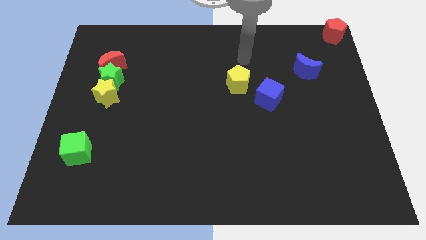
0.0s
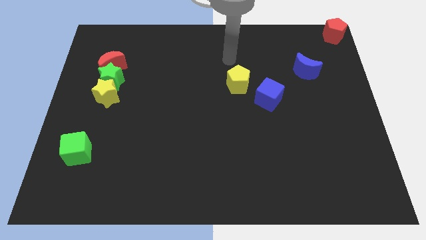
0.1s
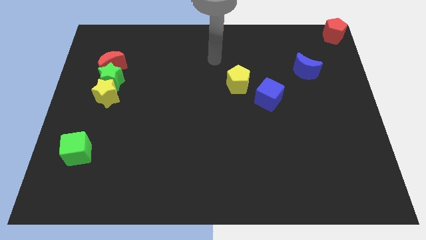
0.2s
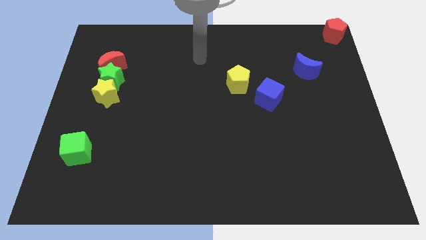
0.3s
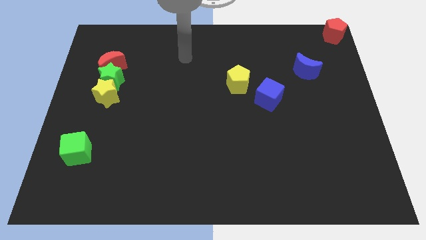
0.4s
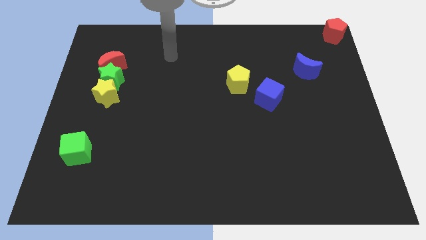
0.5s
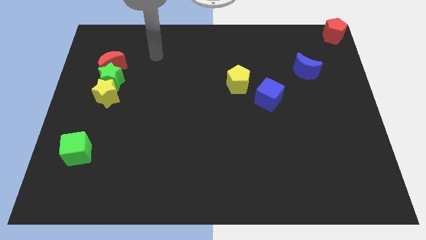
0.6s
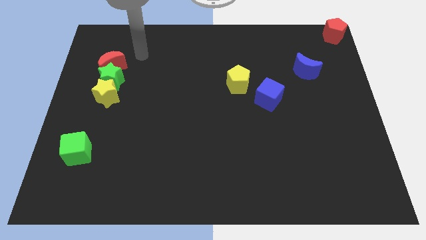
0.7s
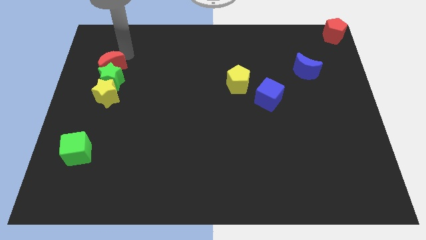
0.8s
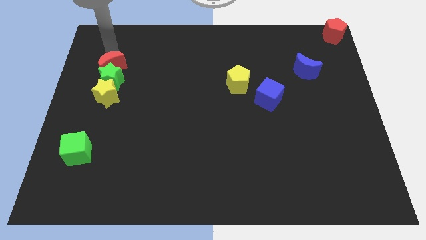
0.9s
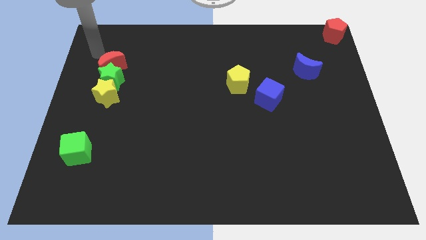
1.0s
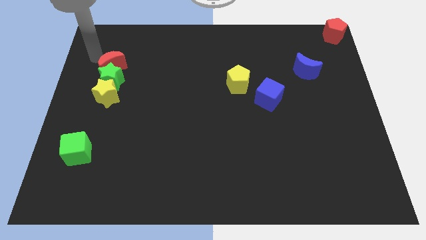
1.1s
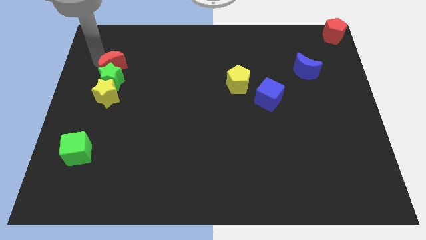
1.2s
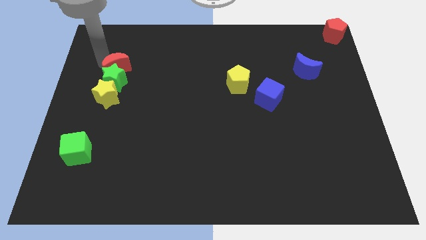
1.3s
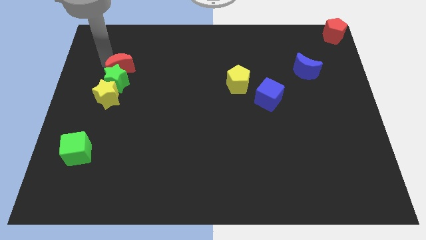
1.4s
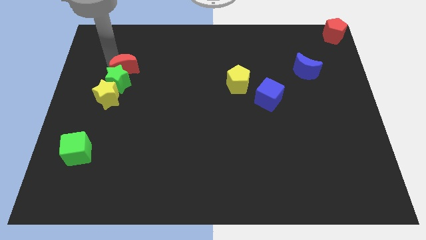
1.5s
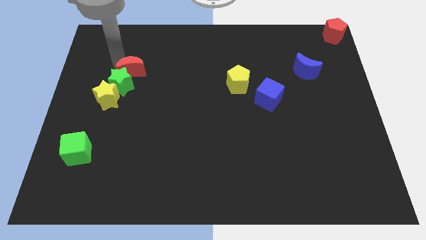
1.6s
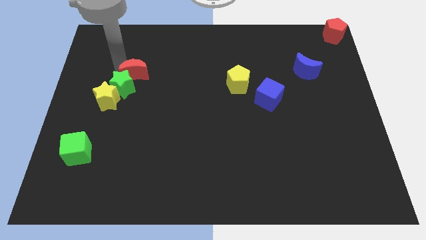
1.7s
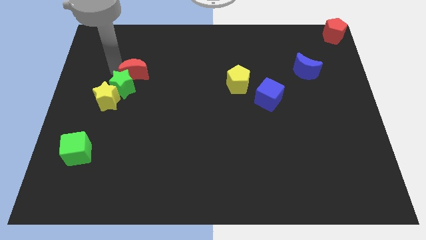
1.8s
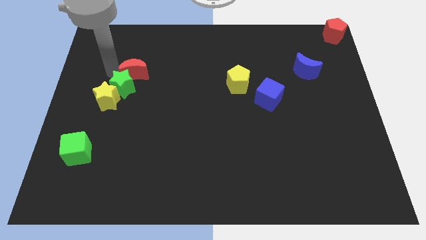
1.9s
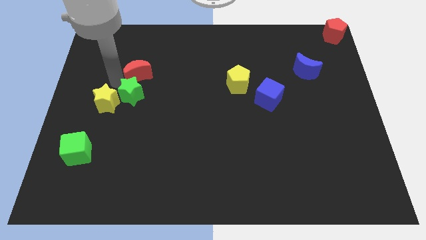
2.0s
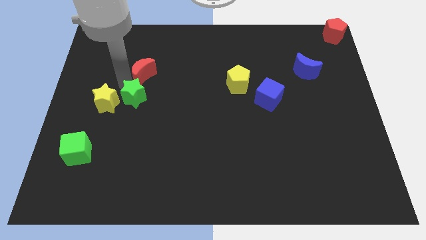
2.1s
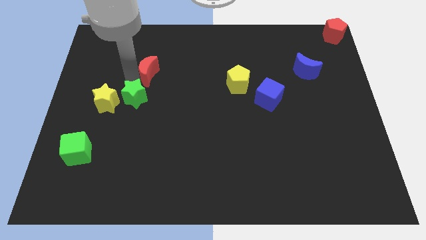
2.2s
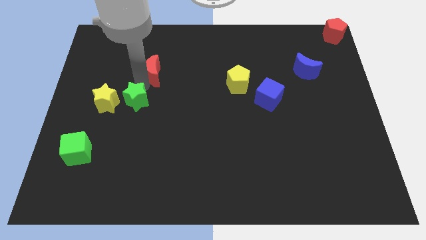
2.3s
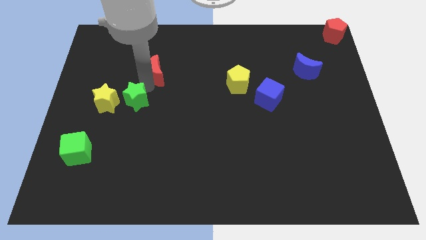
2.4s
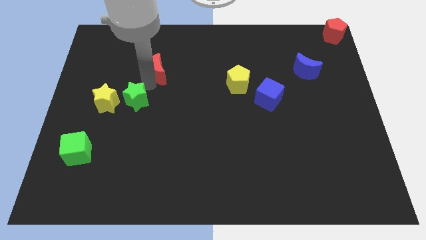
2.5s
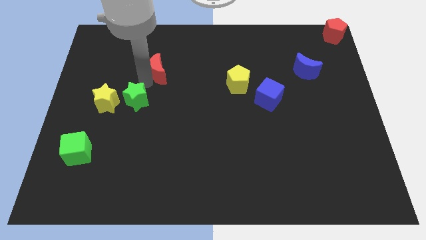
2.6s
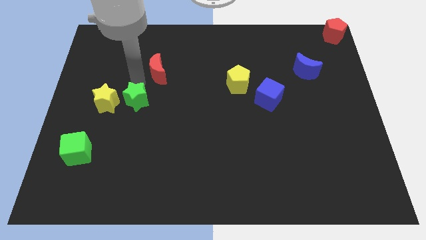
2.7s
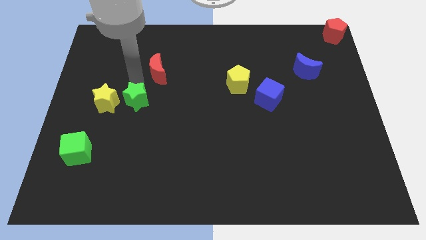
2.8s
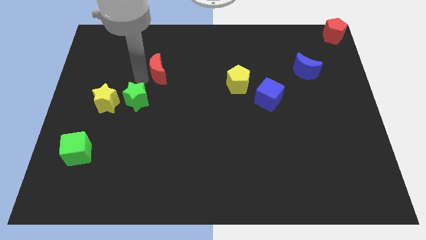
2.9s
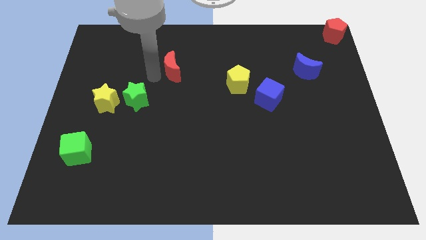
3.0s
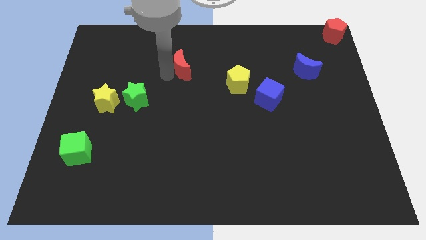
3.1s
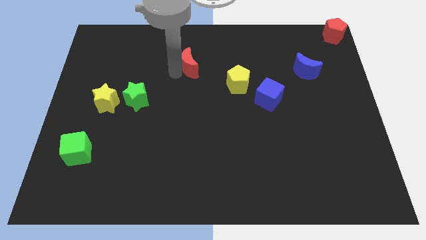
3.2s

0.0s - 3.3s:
push red crescent towards yellow pentagon

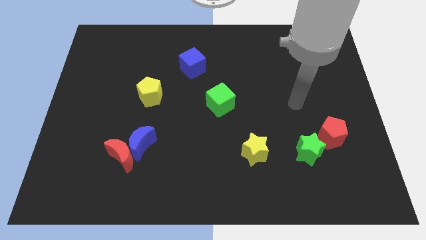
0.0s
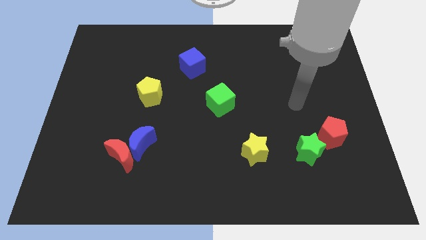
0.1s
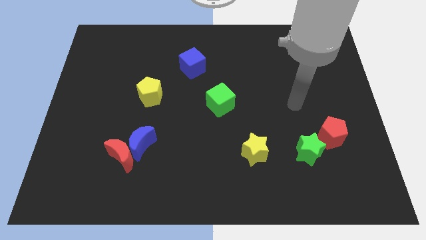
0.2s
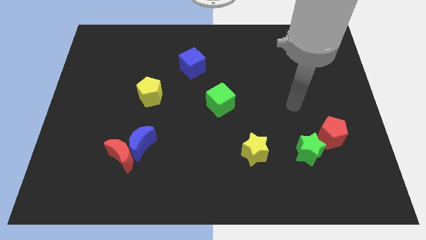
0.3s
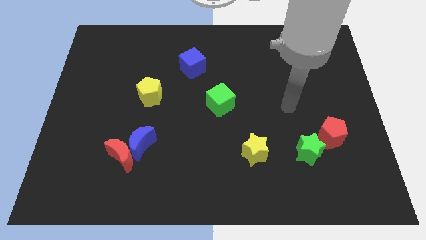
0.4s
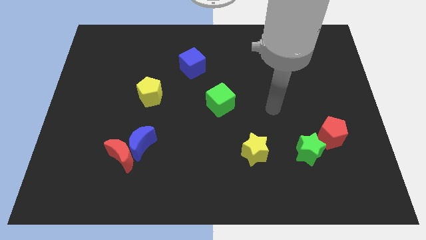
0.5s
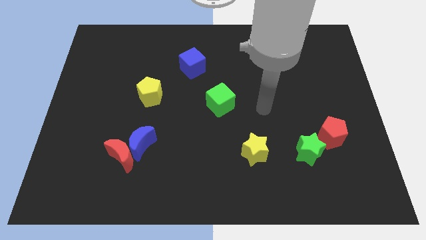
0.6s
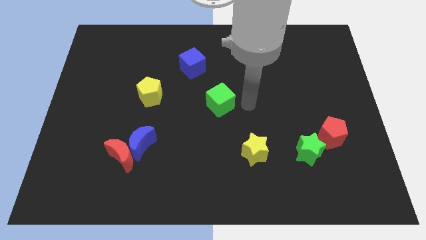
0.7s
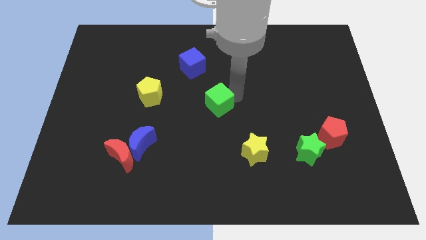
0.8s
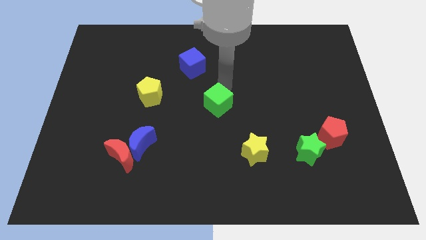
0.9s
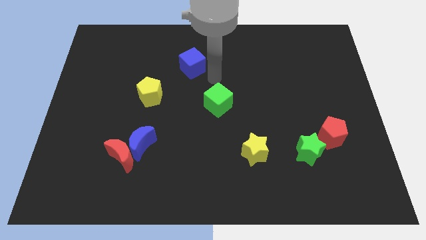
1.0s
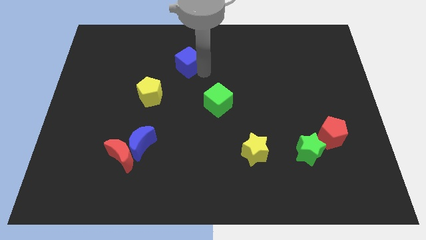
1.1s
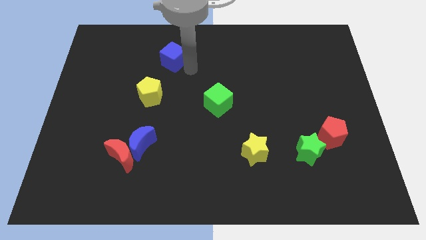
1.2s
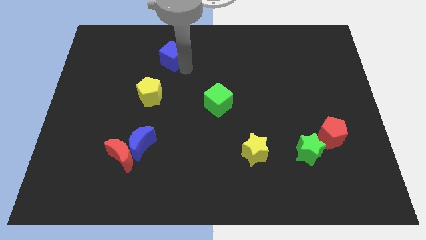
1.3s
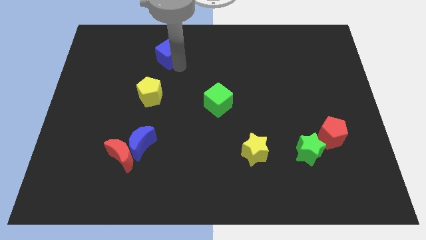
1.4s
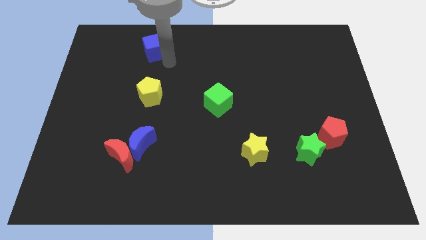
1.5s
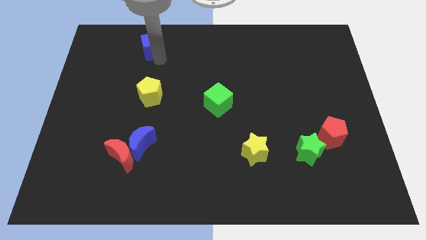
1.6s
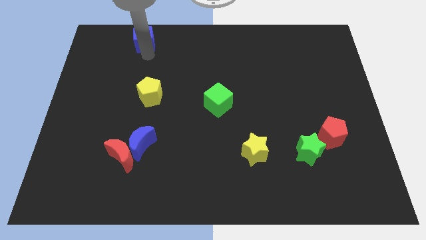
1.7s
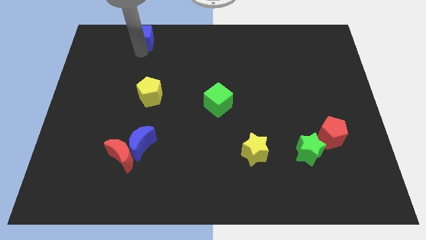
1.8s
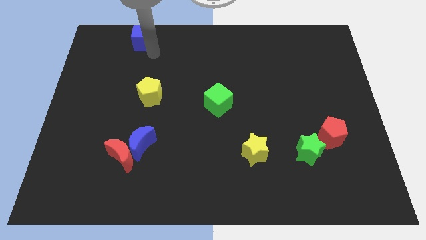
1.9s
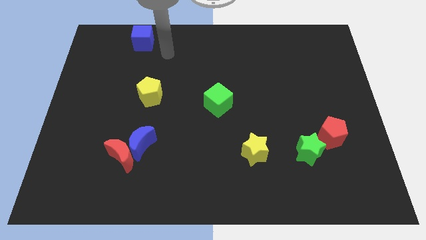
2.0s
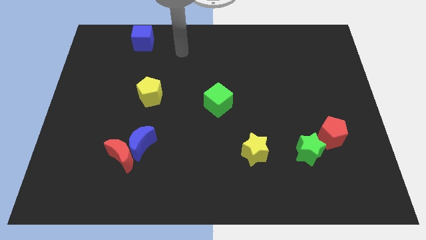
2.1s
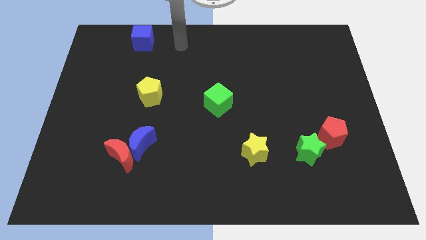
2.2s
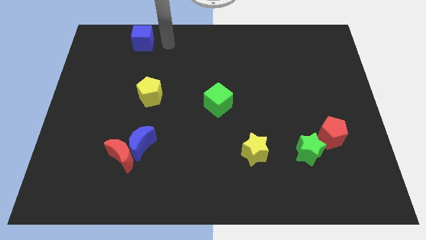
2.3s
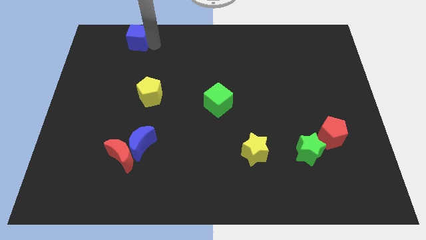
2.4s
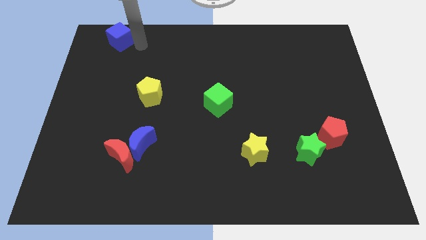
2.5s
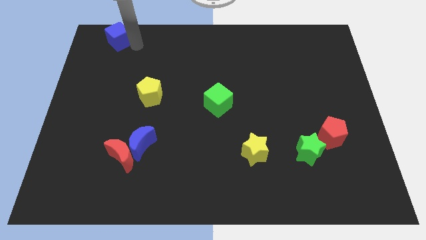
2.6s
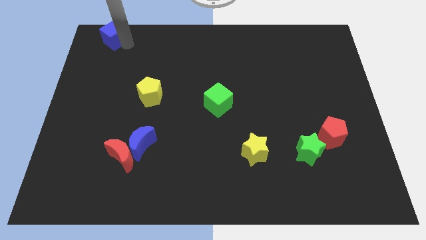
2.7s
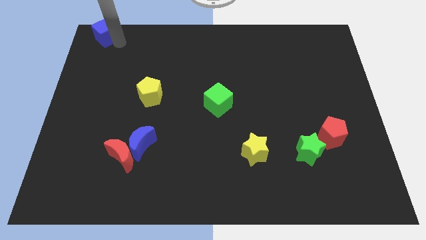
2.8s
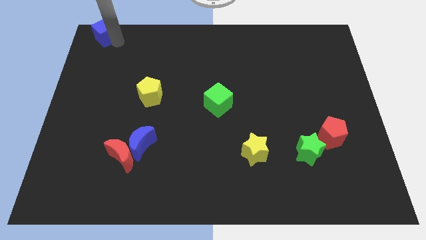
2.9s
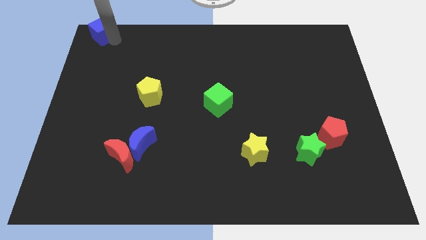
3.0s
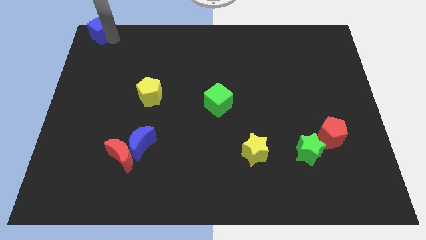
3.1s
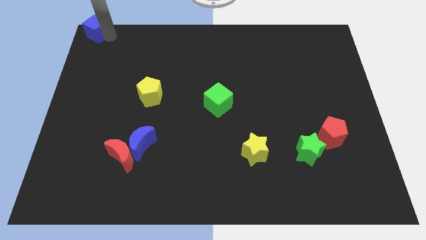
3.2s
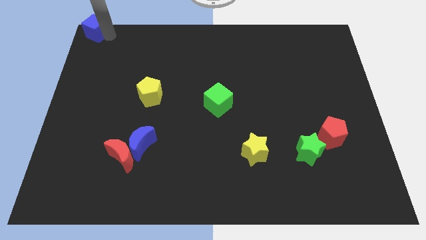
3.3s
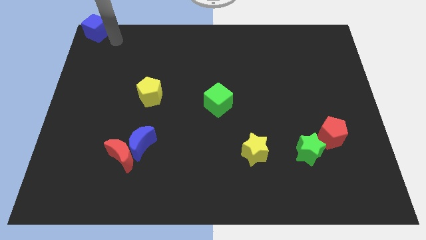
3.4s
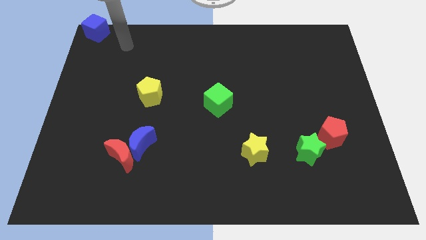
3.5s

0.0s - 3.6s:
push the blue cube on the top left corner of the board

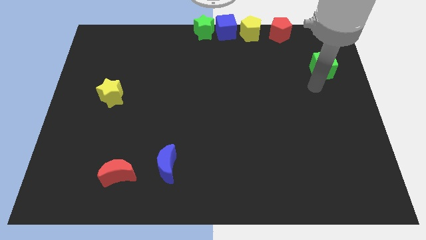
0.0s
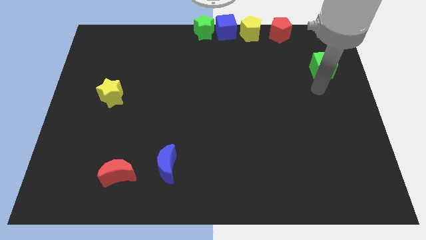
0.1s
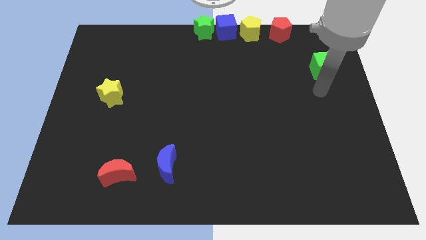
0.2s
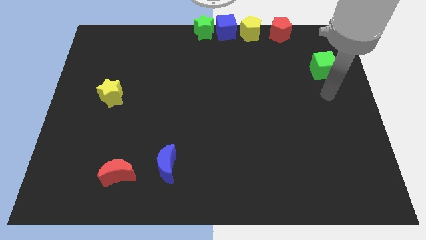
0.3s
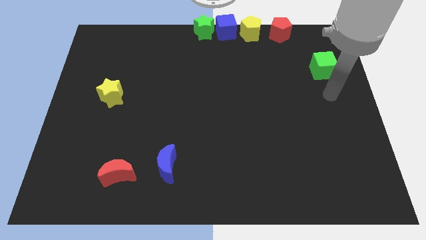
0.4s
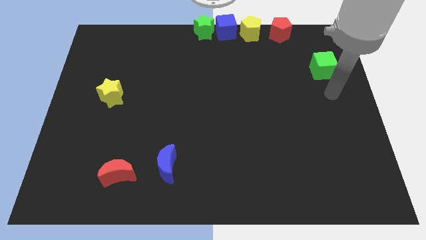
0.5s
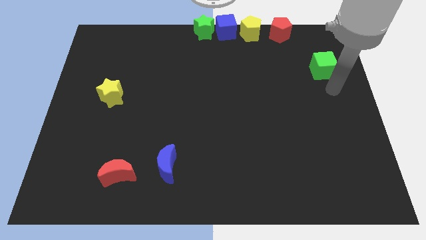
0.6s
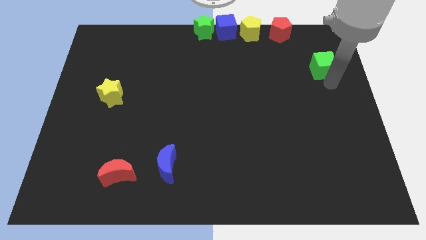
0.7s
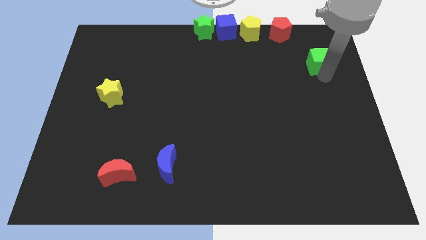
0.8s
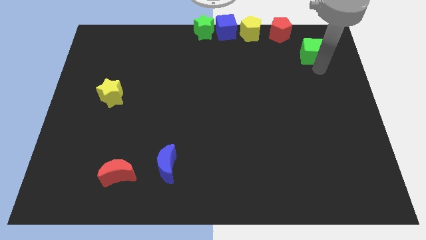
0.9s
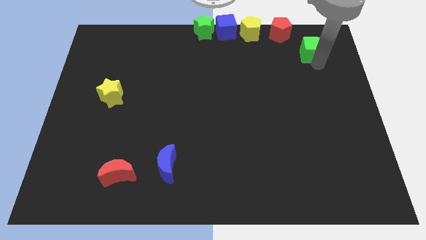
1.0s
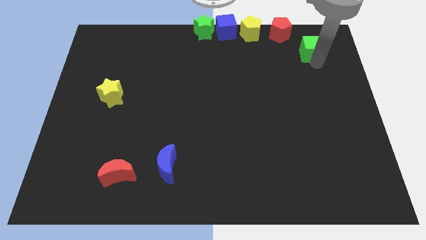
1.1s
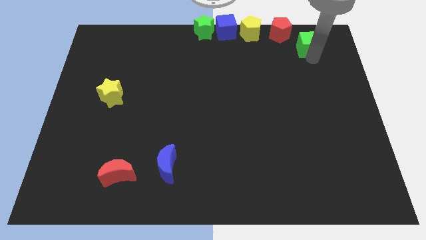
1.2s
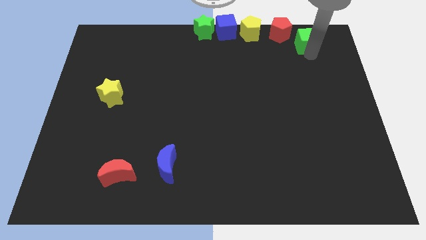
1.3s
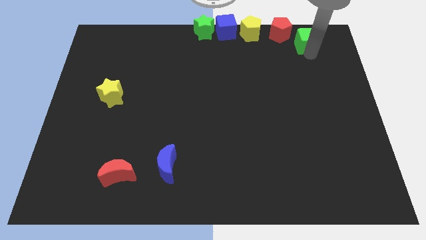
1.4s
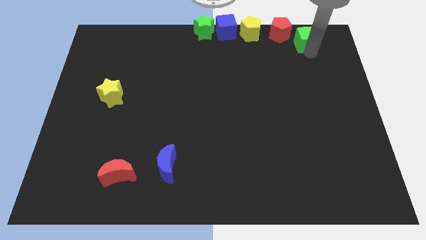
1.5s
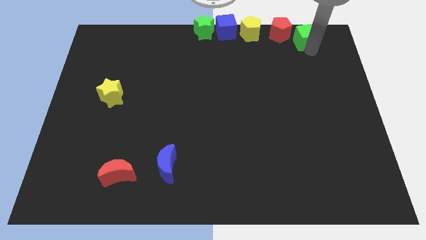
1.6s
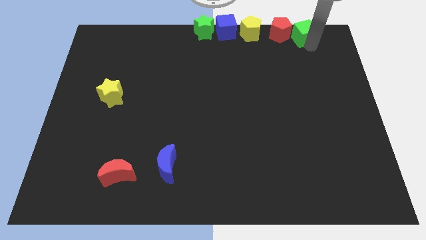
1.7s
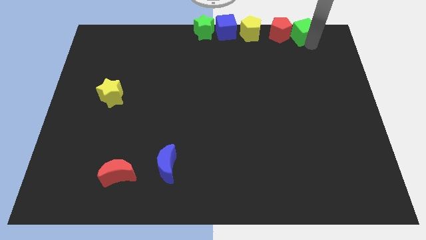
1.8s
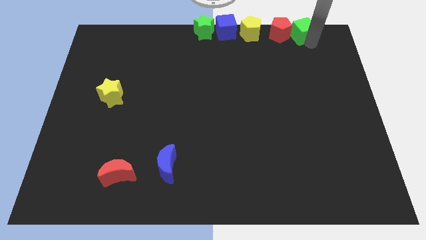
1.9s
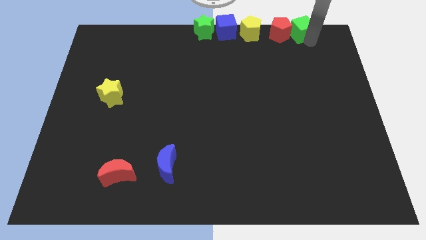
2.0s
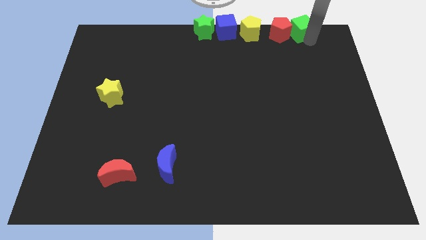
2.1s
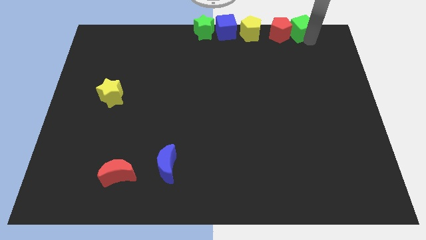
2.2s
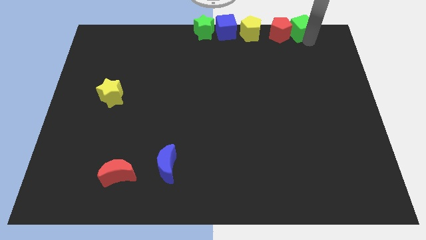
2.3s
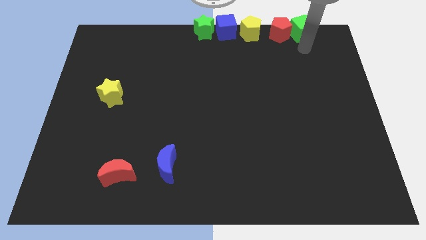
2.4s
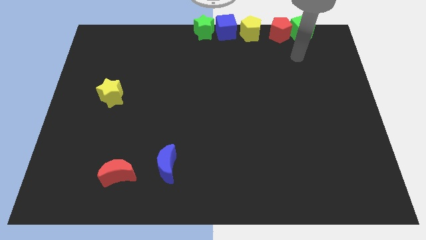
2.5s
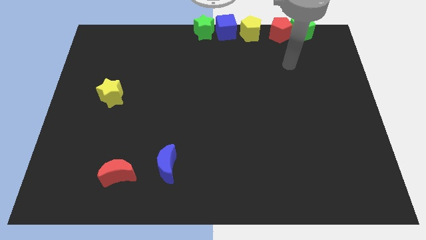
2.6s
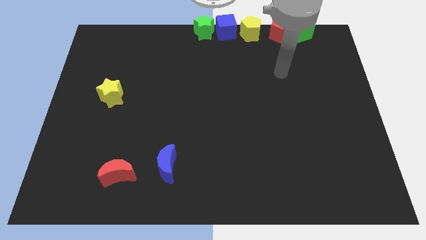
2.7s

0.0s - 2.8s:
push the green cube to the right side of the red pentagon
